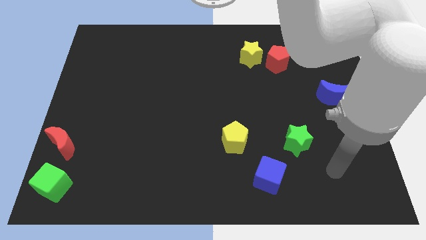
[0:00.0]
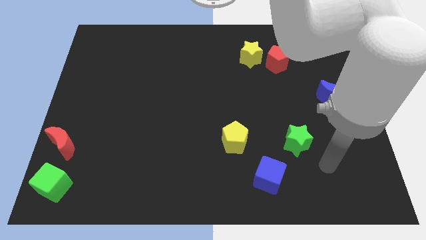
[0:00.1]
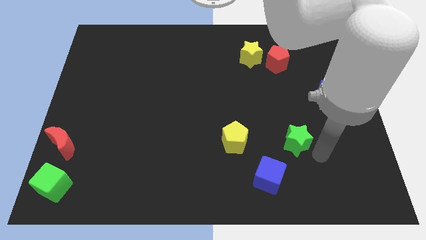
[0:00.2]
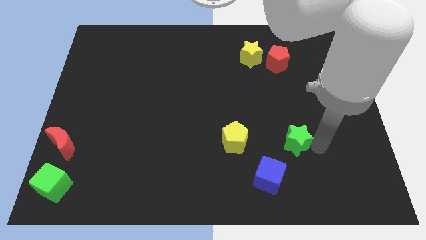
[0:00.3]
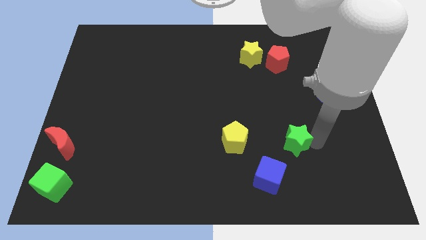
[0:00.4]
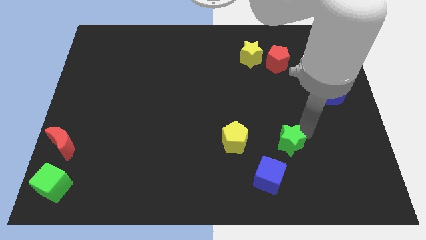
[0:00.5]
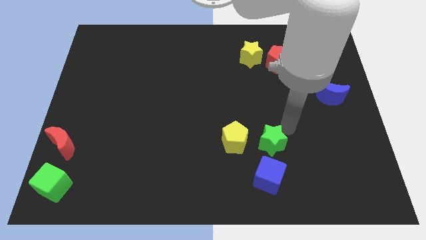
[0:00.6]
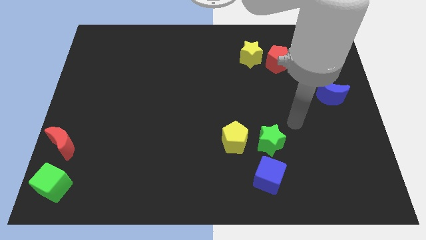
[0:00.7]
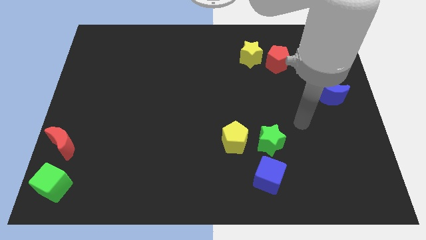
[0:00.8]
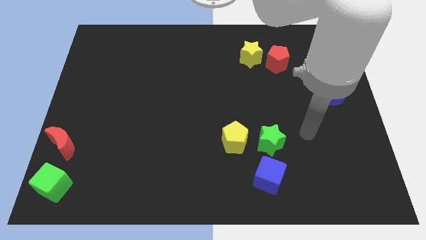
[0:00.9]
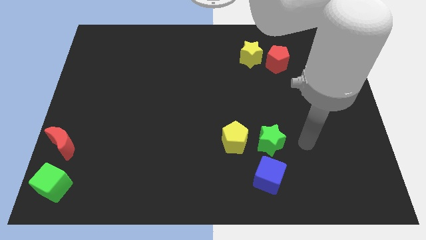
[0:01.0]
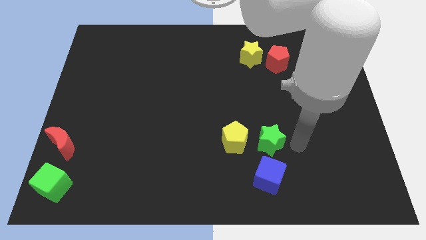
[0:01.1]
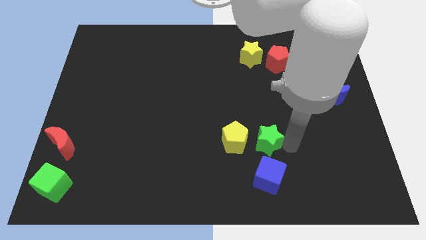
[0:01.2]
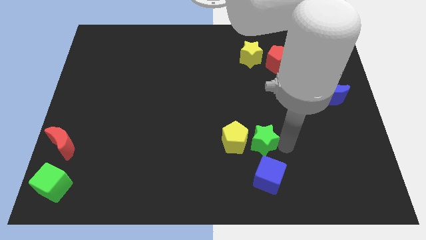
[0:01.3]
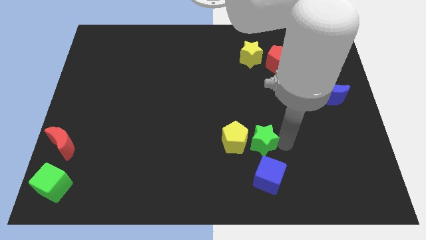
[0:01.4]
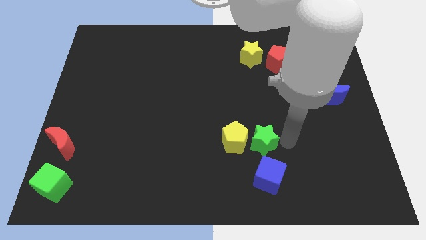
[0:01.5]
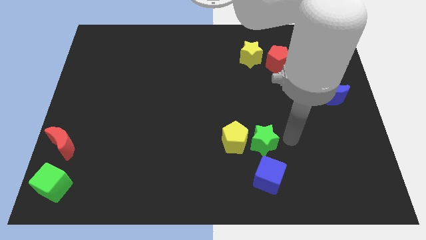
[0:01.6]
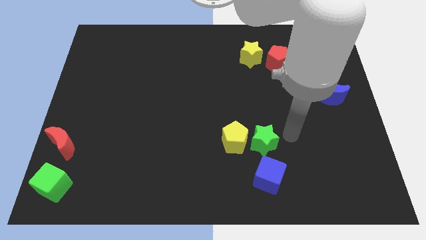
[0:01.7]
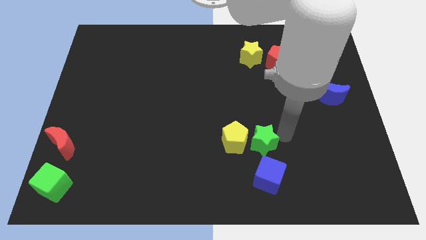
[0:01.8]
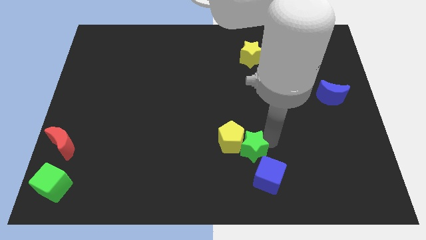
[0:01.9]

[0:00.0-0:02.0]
push the green star into the yellow pentagon

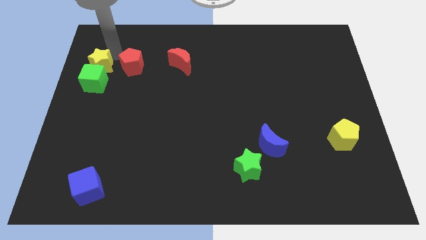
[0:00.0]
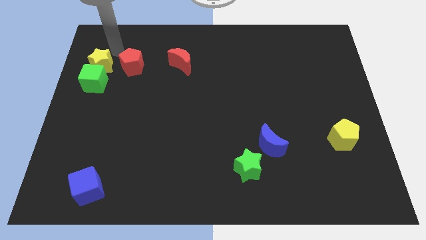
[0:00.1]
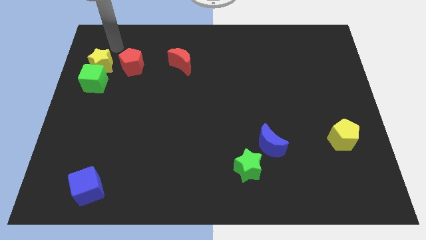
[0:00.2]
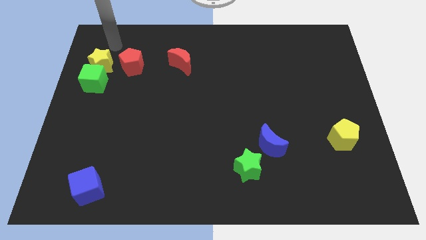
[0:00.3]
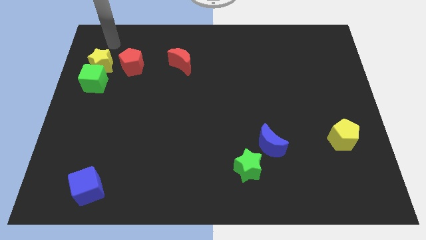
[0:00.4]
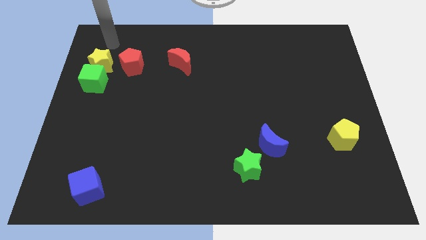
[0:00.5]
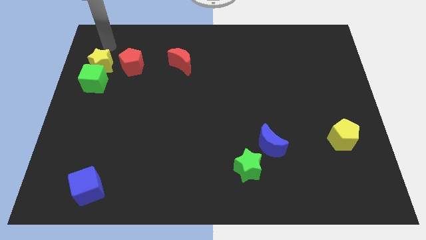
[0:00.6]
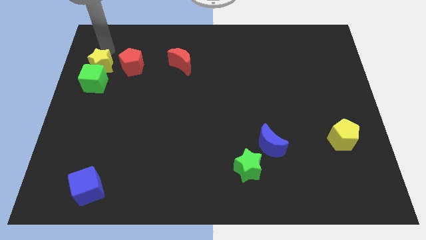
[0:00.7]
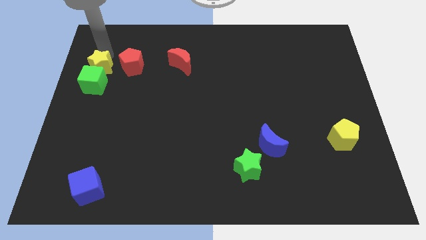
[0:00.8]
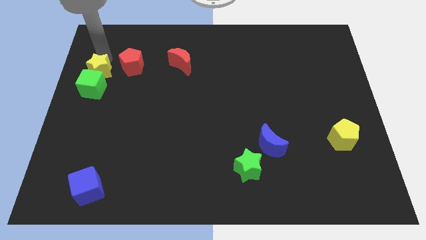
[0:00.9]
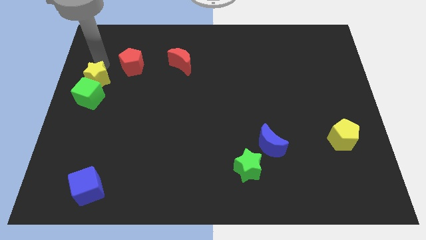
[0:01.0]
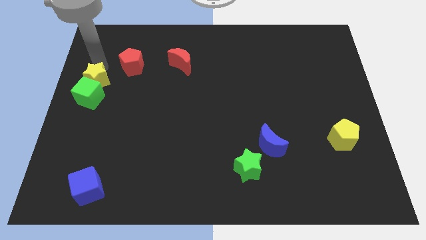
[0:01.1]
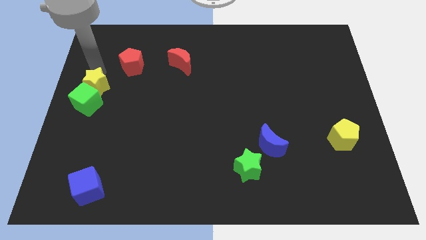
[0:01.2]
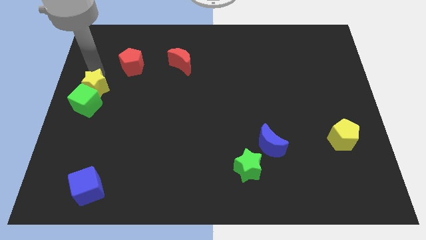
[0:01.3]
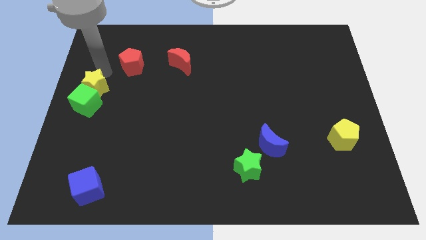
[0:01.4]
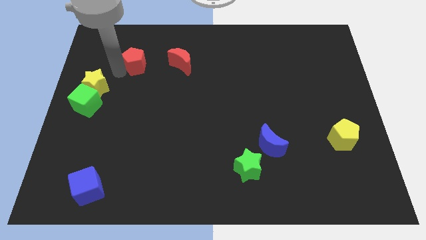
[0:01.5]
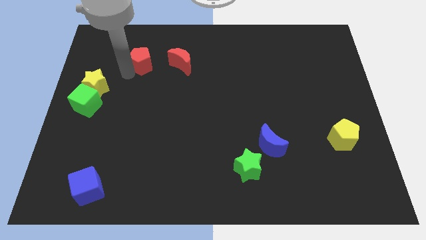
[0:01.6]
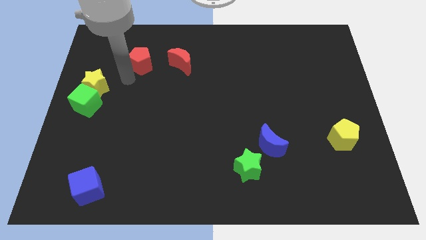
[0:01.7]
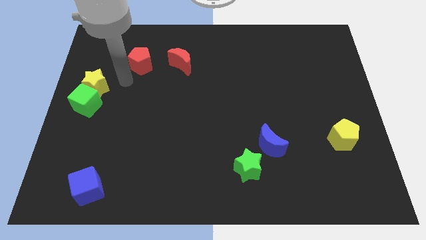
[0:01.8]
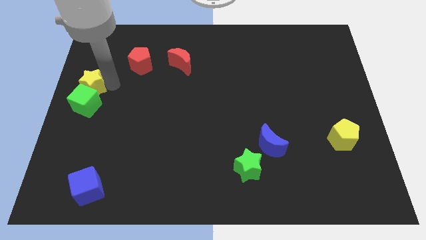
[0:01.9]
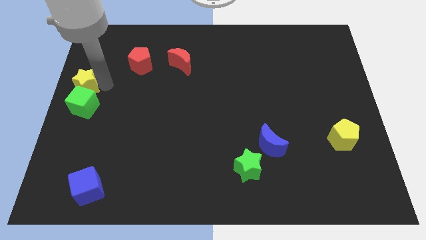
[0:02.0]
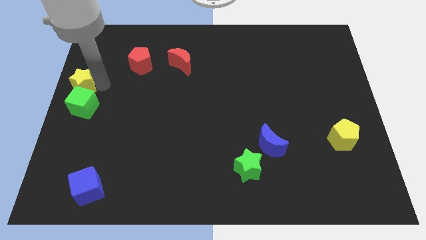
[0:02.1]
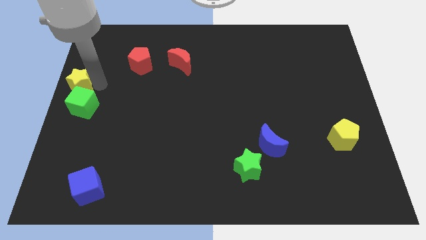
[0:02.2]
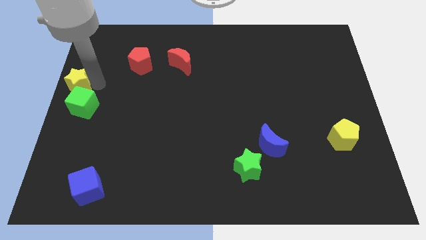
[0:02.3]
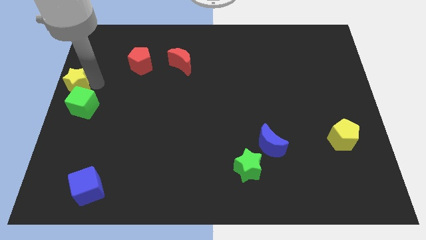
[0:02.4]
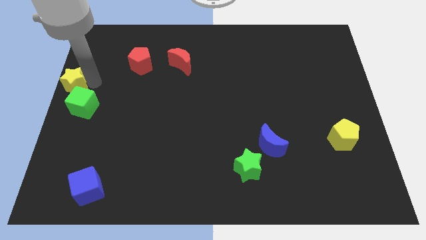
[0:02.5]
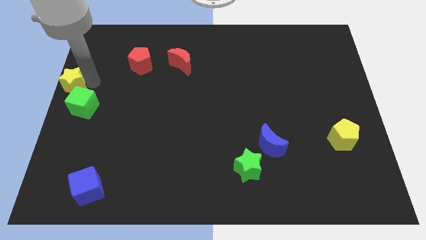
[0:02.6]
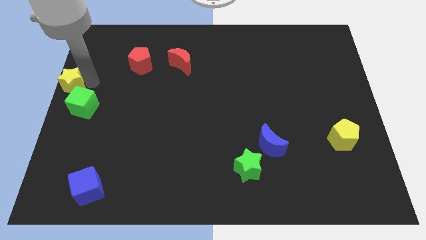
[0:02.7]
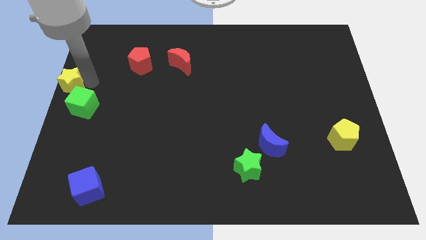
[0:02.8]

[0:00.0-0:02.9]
push the yellow star to the left center of the board

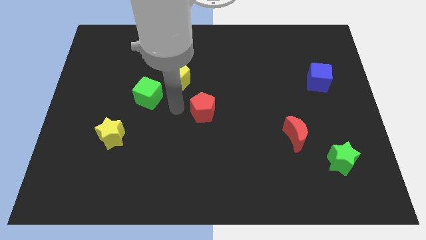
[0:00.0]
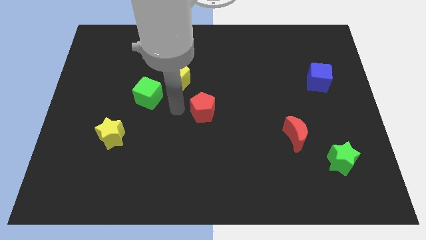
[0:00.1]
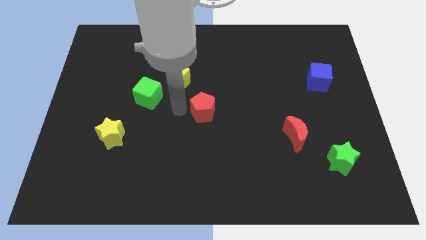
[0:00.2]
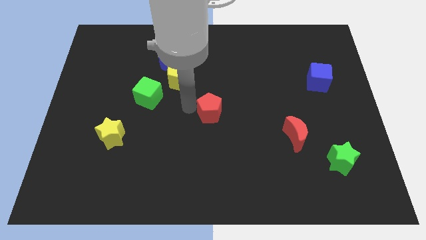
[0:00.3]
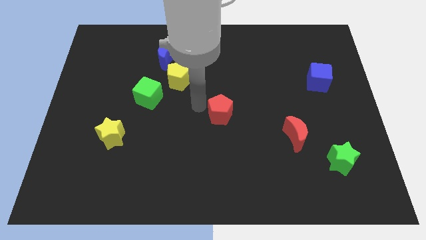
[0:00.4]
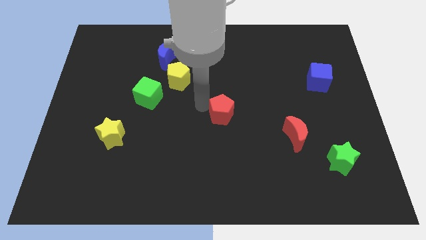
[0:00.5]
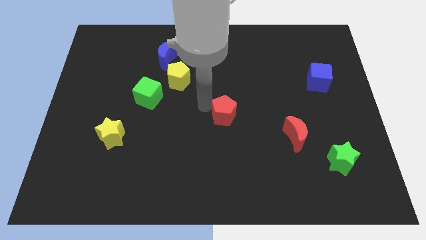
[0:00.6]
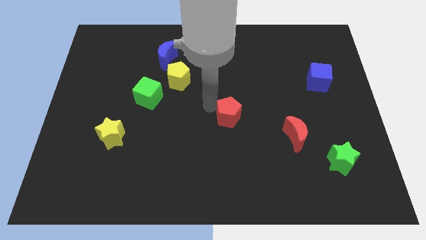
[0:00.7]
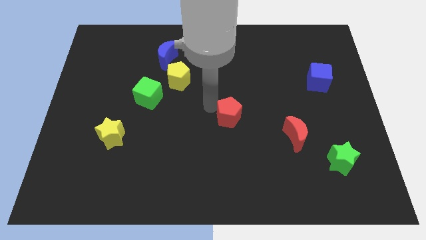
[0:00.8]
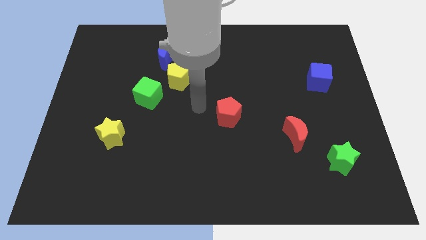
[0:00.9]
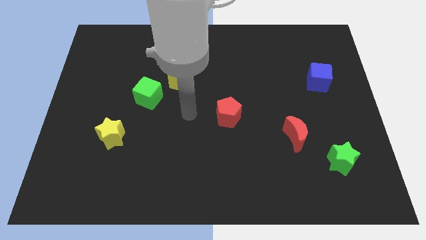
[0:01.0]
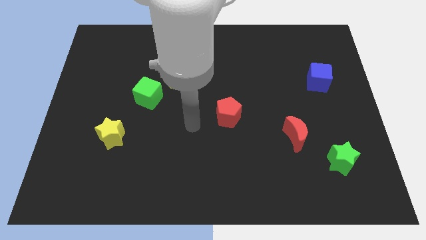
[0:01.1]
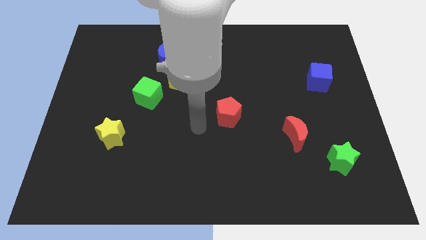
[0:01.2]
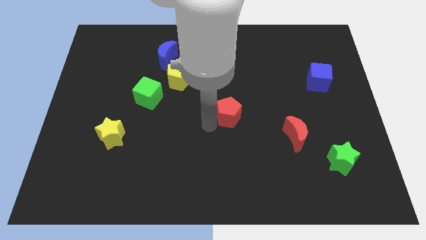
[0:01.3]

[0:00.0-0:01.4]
place the red pentagon at the center of the board

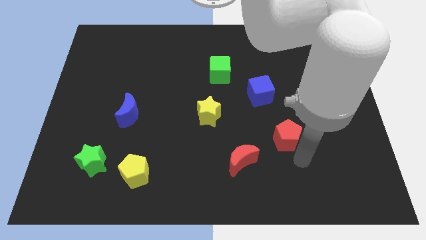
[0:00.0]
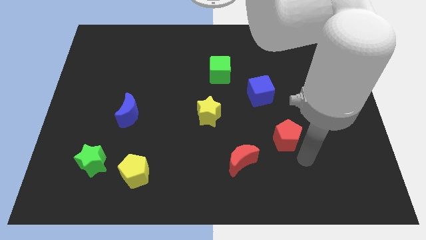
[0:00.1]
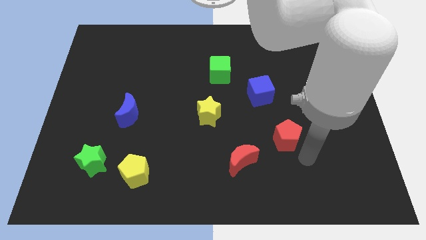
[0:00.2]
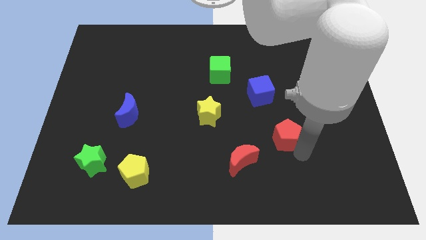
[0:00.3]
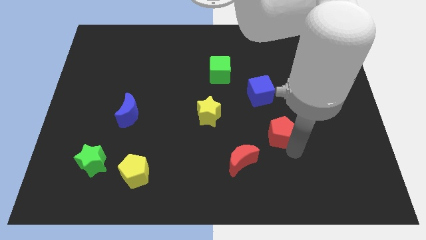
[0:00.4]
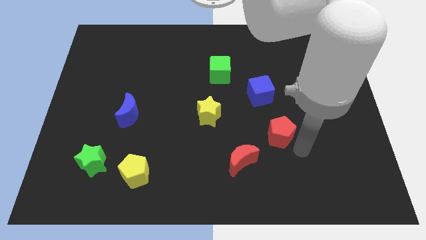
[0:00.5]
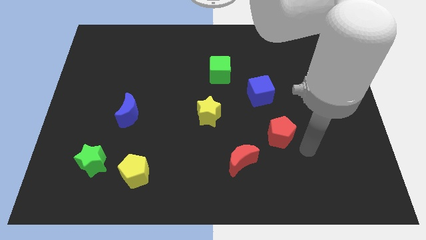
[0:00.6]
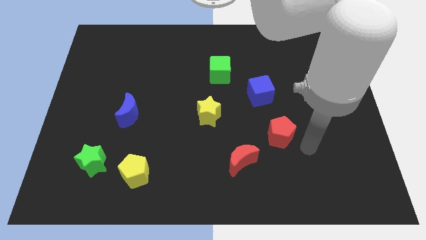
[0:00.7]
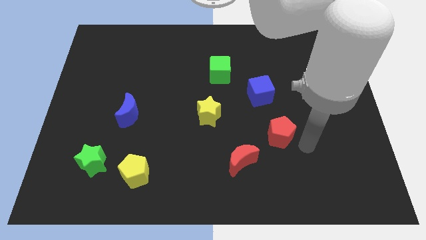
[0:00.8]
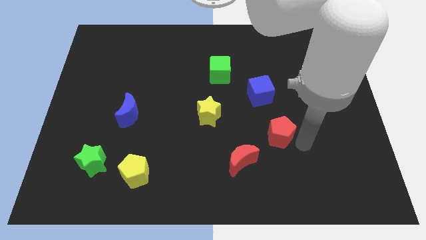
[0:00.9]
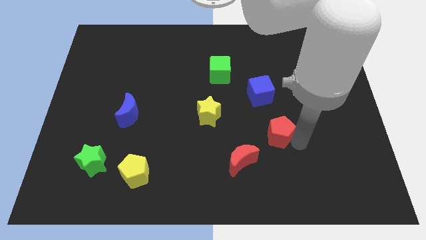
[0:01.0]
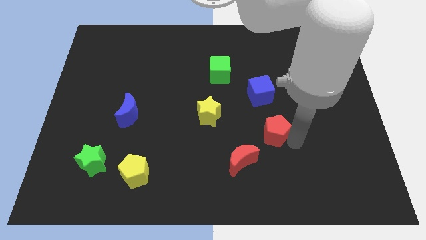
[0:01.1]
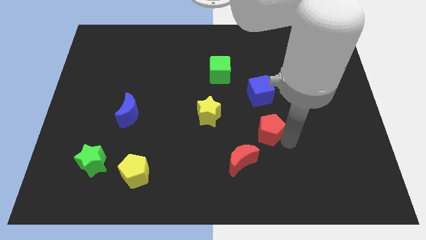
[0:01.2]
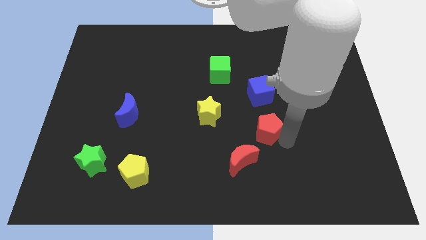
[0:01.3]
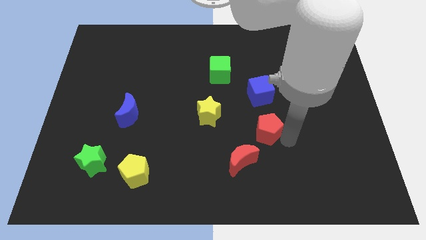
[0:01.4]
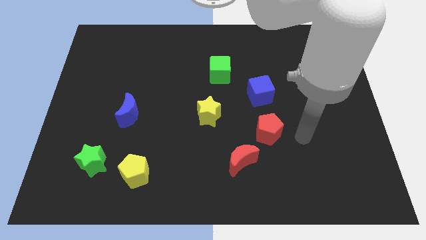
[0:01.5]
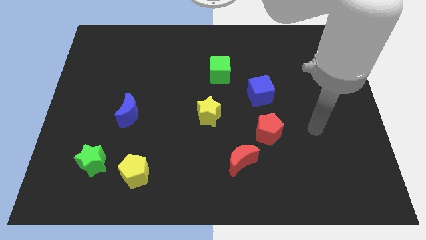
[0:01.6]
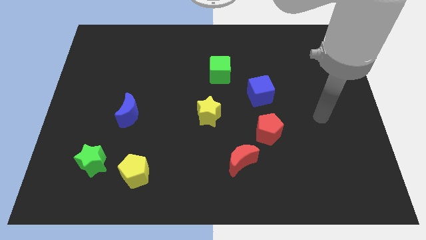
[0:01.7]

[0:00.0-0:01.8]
place the red pentagon vertically below the blue cube

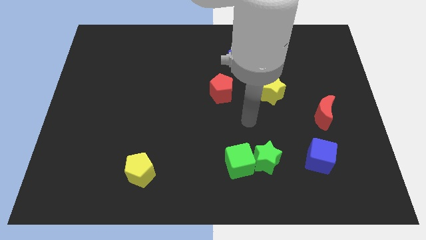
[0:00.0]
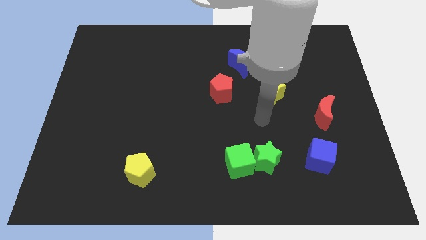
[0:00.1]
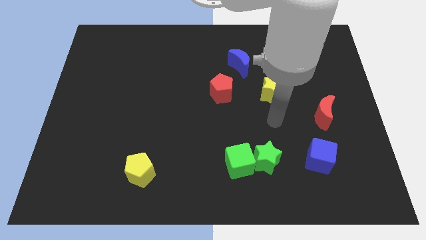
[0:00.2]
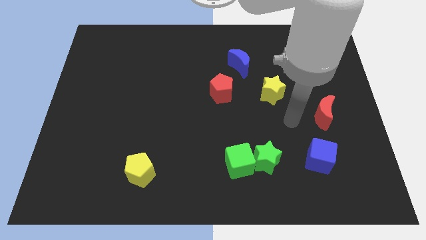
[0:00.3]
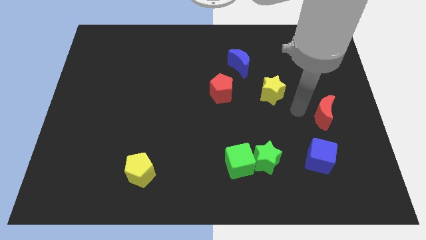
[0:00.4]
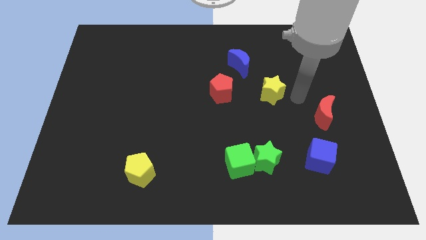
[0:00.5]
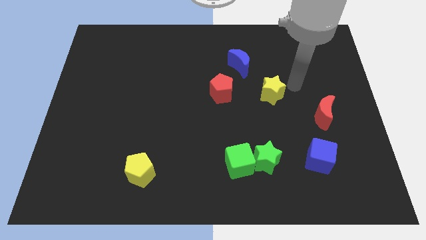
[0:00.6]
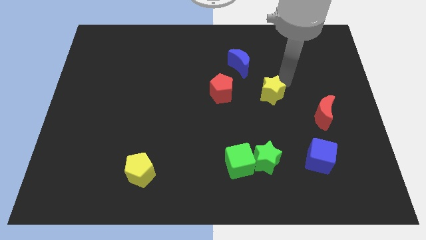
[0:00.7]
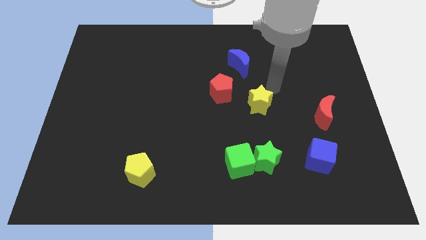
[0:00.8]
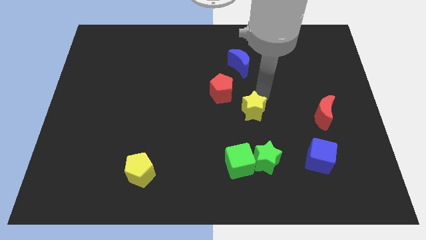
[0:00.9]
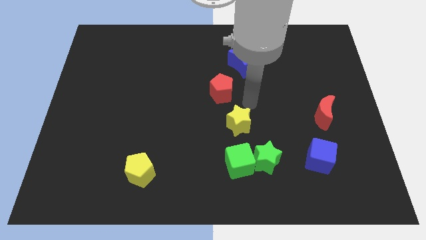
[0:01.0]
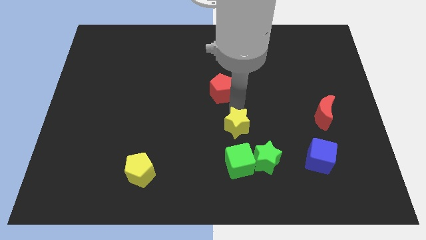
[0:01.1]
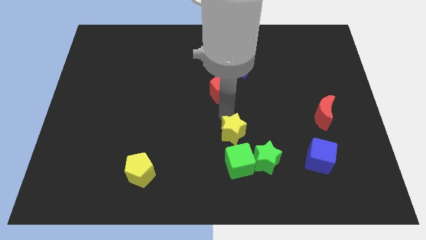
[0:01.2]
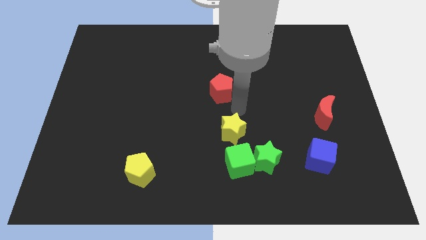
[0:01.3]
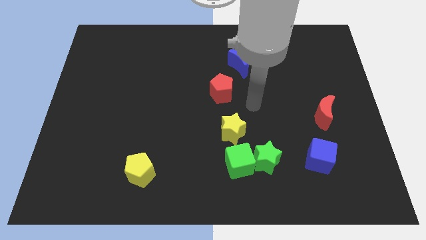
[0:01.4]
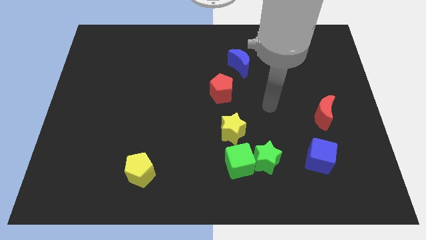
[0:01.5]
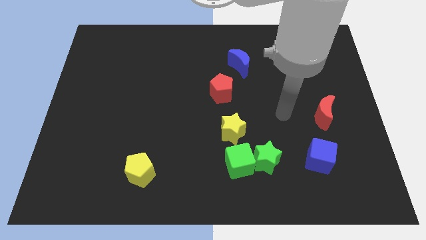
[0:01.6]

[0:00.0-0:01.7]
push the yellow star towards the center
